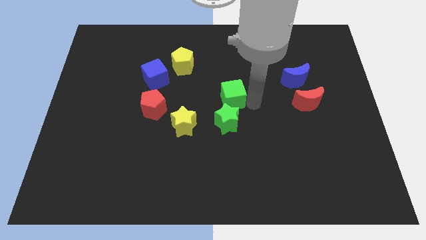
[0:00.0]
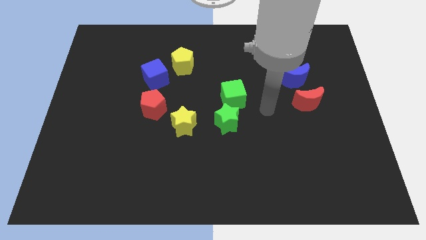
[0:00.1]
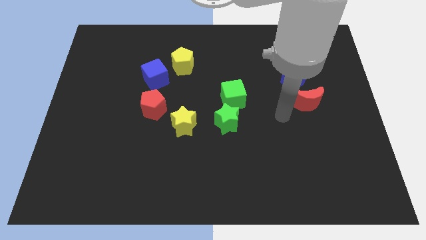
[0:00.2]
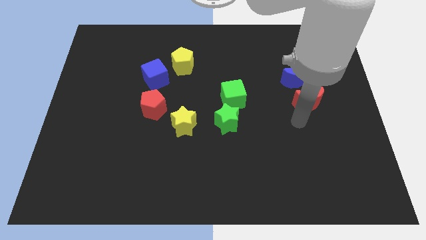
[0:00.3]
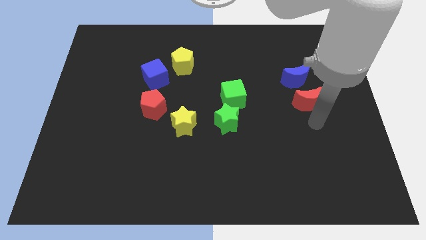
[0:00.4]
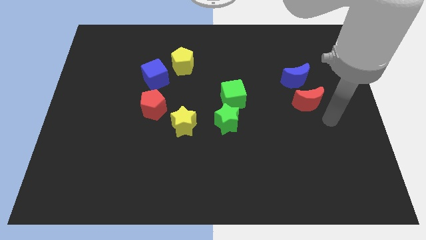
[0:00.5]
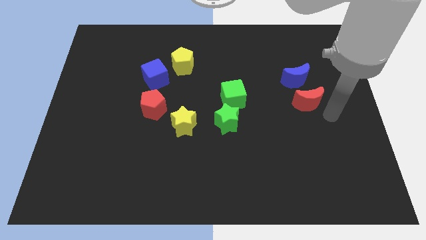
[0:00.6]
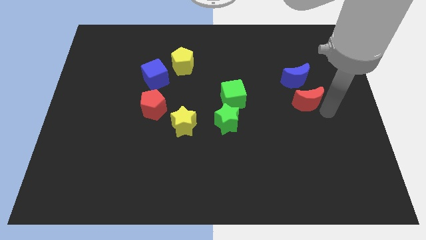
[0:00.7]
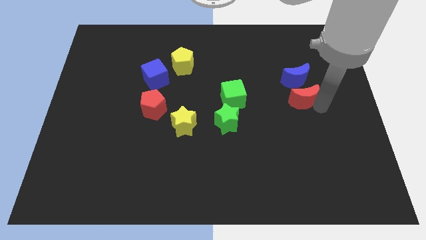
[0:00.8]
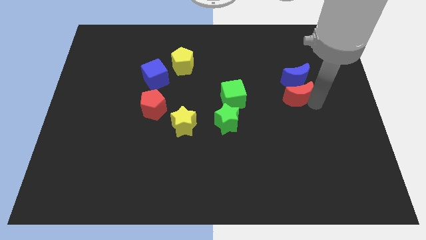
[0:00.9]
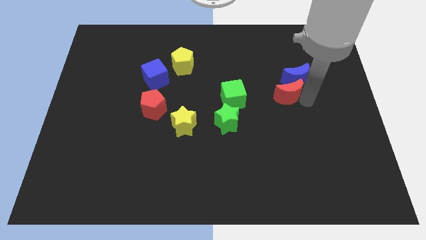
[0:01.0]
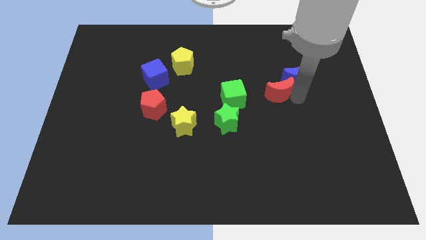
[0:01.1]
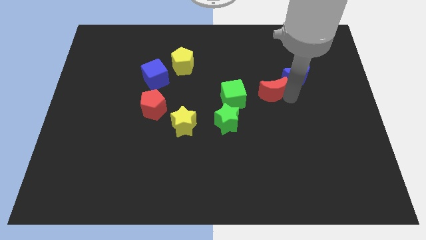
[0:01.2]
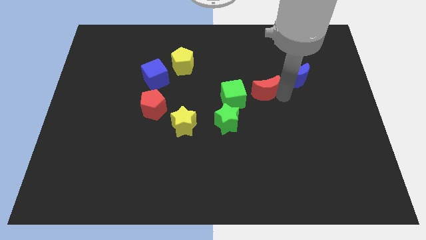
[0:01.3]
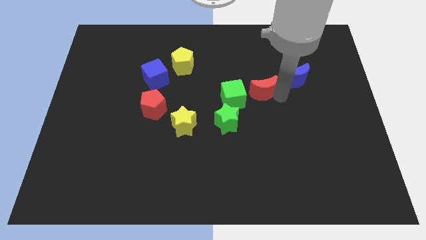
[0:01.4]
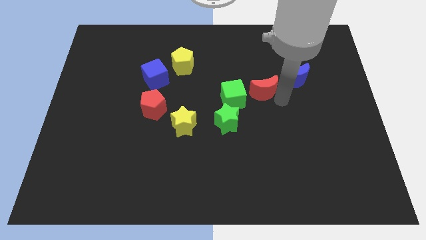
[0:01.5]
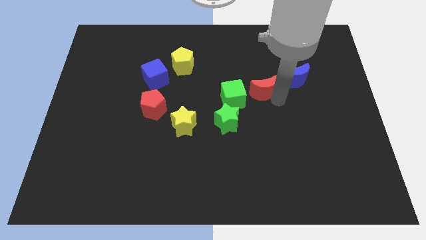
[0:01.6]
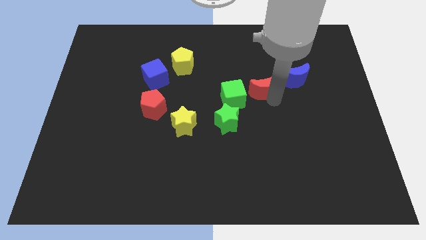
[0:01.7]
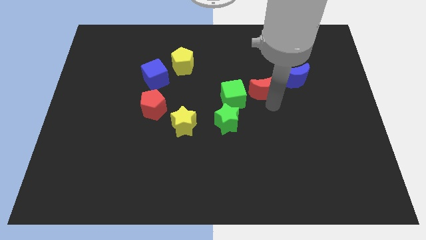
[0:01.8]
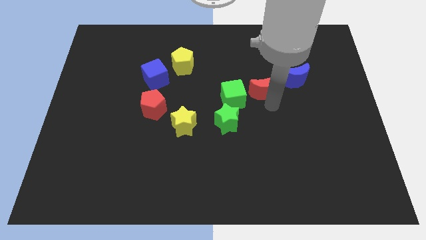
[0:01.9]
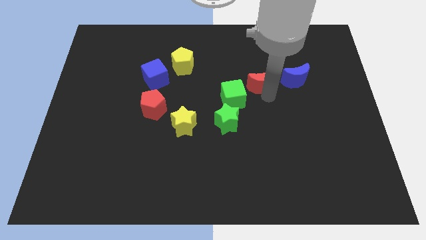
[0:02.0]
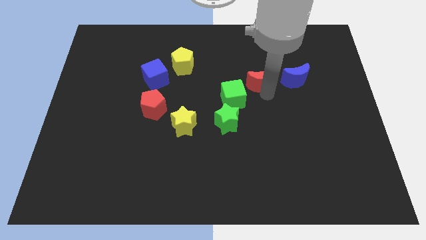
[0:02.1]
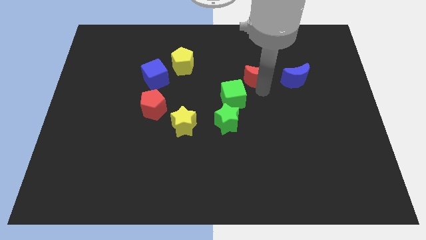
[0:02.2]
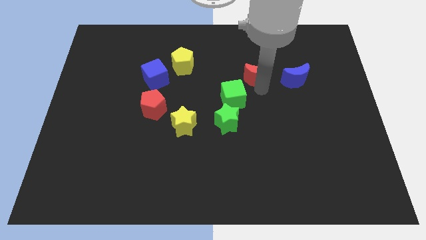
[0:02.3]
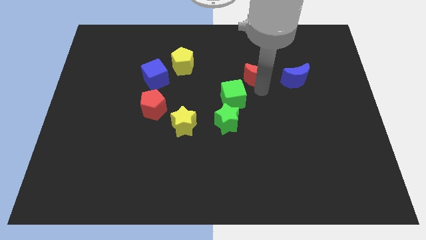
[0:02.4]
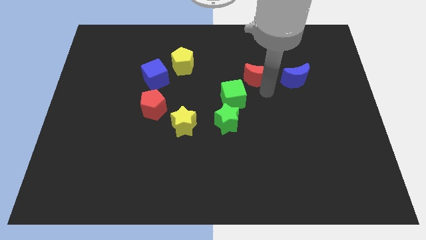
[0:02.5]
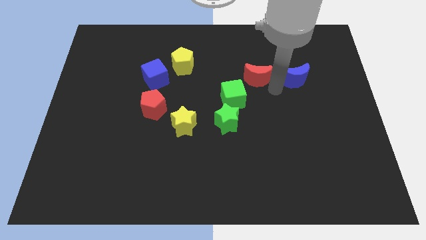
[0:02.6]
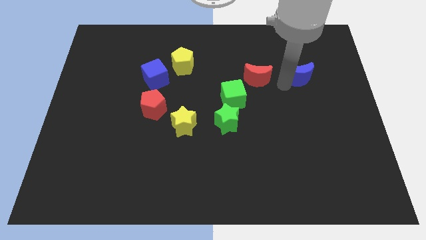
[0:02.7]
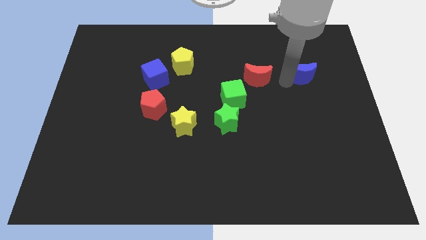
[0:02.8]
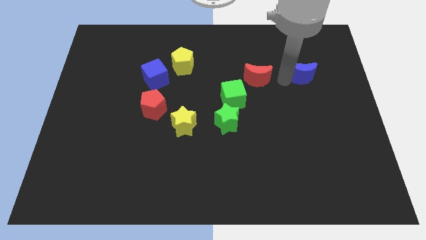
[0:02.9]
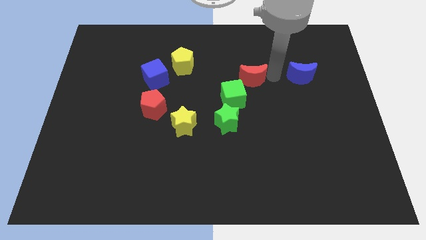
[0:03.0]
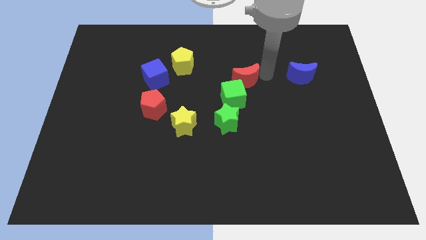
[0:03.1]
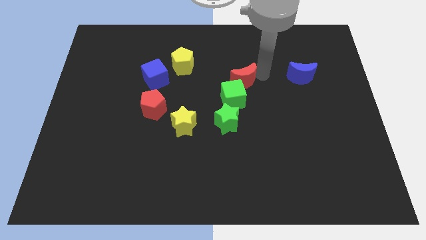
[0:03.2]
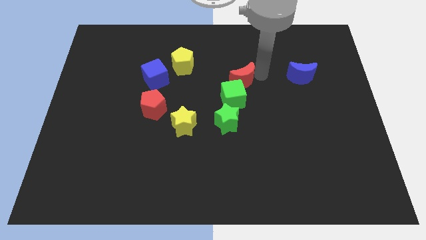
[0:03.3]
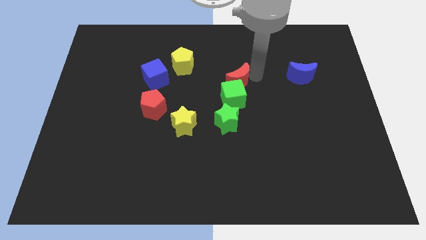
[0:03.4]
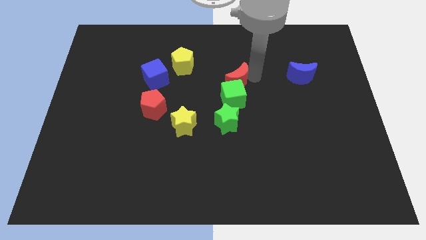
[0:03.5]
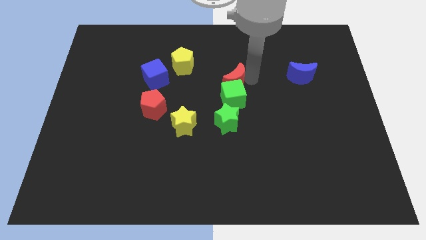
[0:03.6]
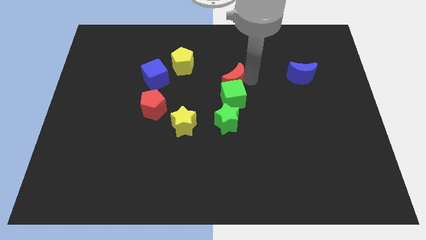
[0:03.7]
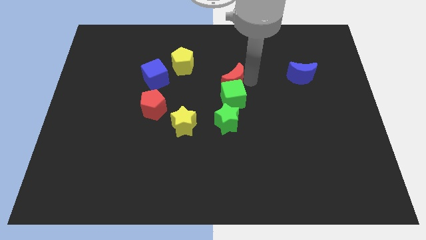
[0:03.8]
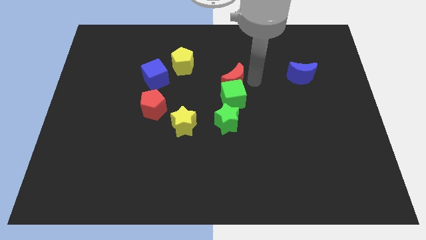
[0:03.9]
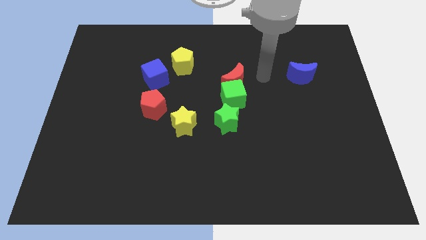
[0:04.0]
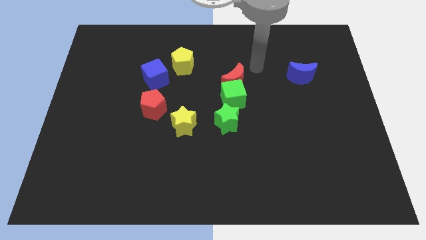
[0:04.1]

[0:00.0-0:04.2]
put the red crescent above the green cube

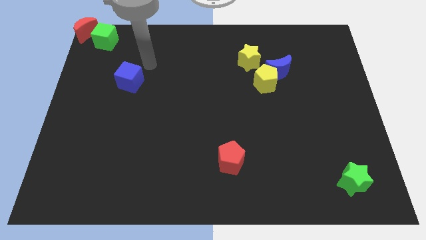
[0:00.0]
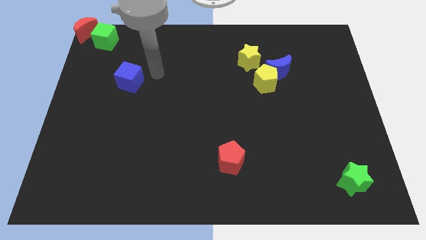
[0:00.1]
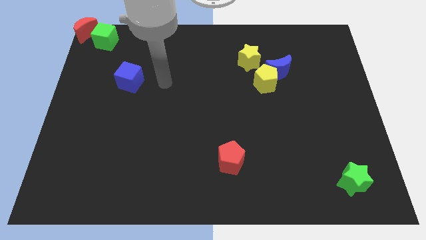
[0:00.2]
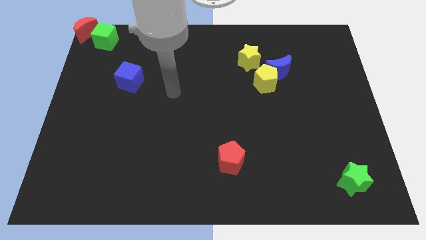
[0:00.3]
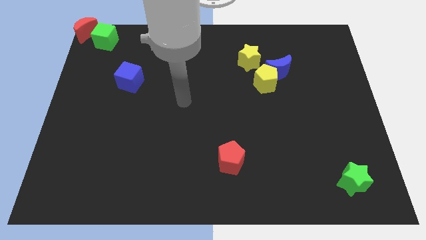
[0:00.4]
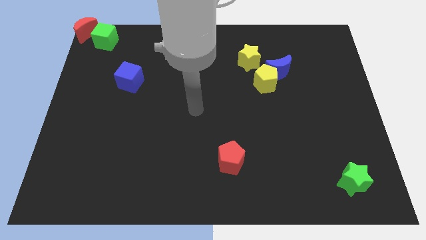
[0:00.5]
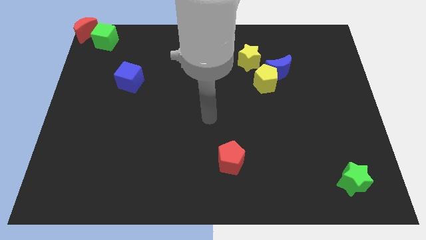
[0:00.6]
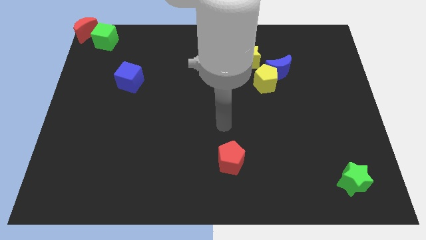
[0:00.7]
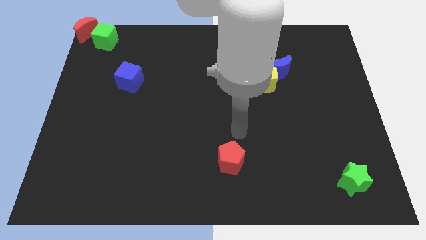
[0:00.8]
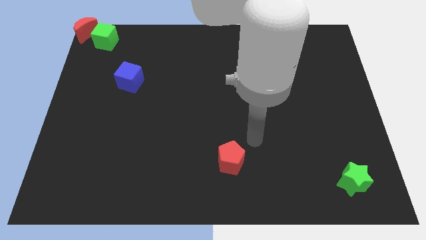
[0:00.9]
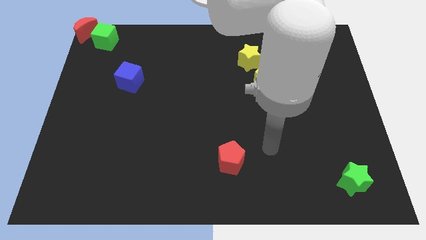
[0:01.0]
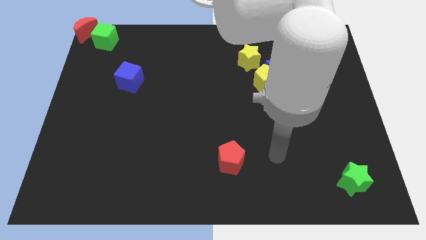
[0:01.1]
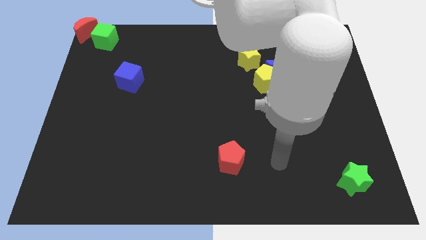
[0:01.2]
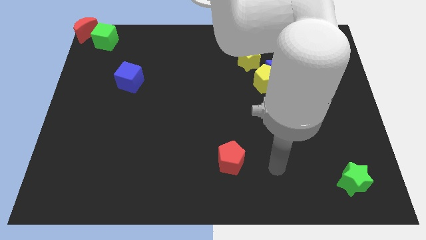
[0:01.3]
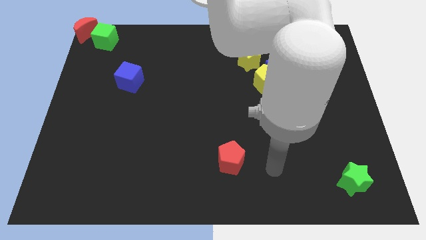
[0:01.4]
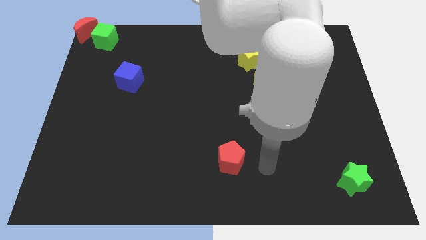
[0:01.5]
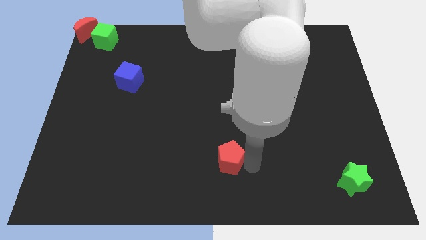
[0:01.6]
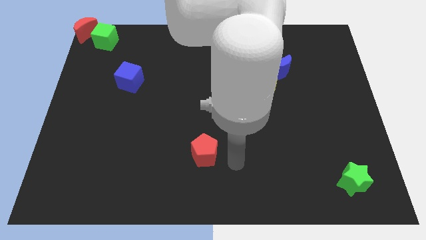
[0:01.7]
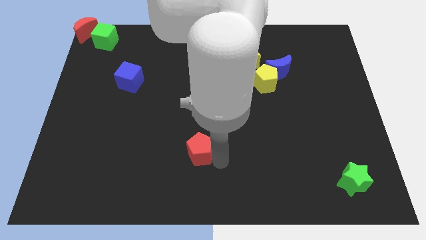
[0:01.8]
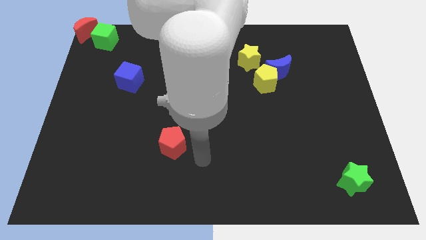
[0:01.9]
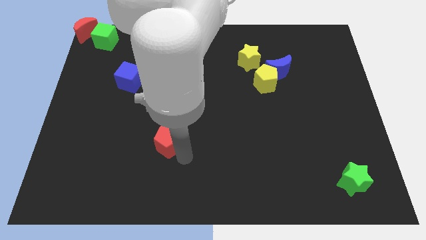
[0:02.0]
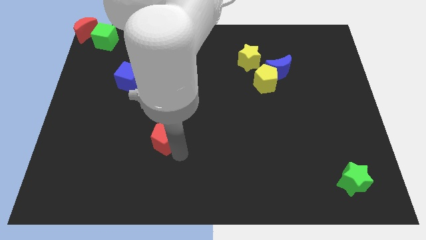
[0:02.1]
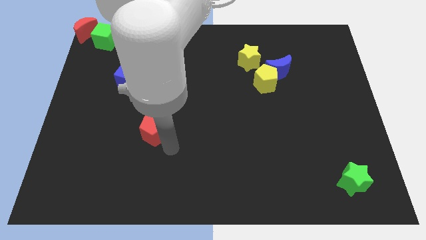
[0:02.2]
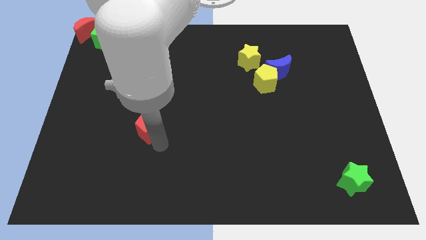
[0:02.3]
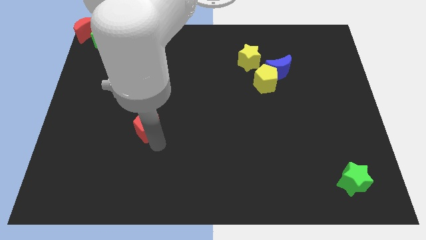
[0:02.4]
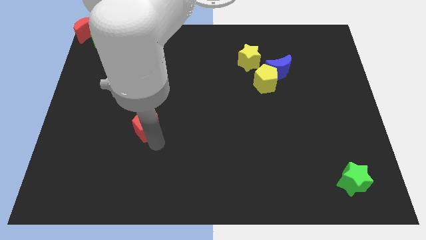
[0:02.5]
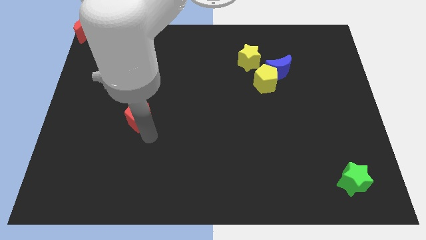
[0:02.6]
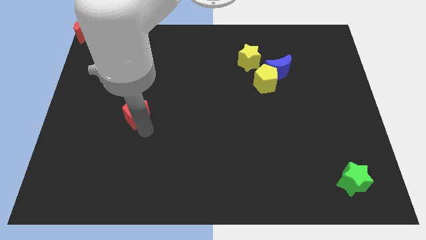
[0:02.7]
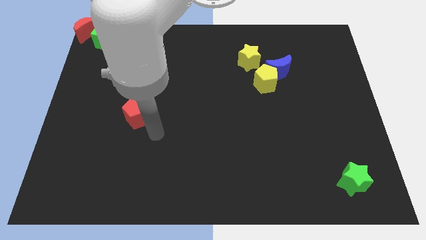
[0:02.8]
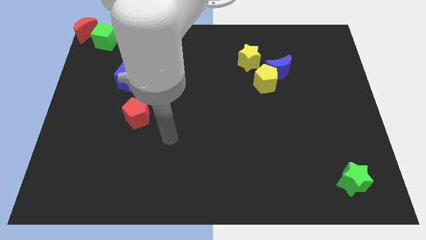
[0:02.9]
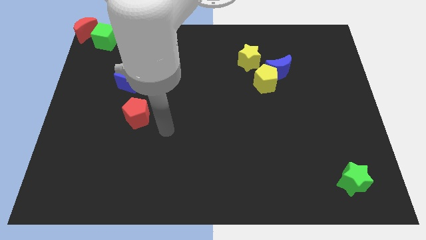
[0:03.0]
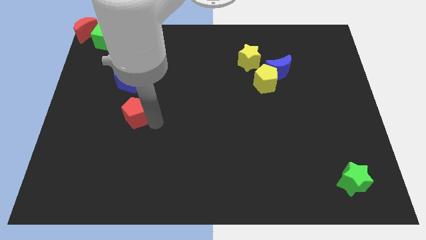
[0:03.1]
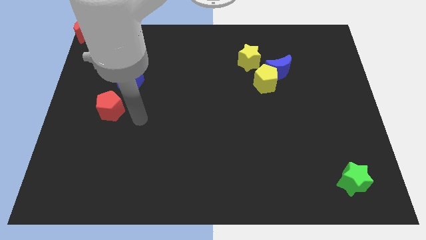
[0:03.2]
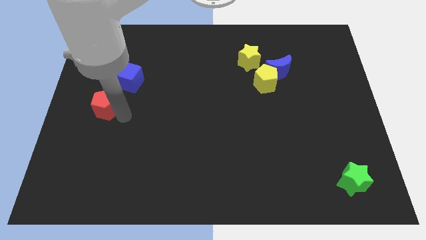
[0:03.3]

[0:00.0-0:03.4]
push the red pentagon towards the blue cube

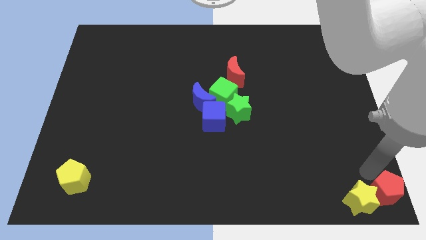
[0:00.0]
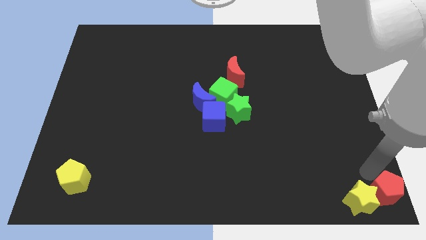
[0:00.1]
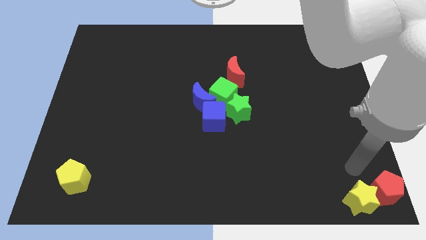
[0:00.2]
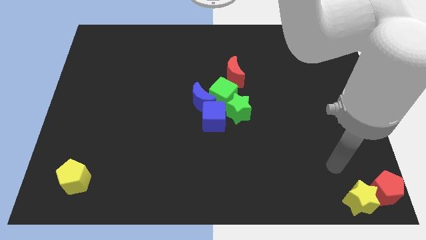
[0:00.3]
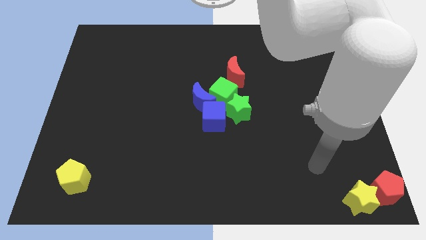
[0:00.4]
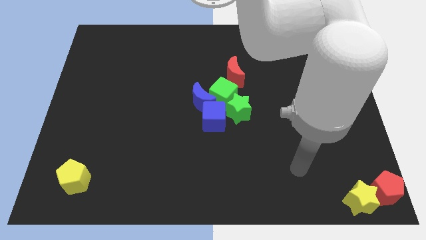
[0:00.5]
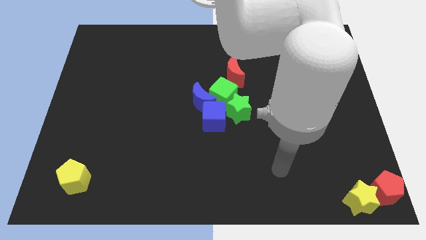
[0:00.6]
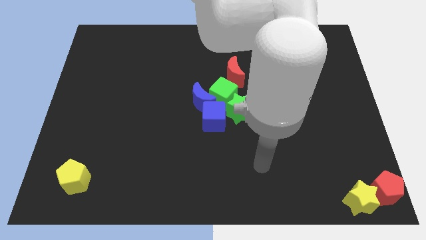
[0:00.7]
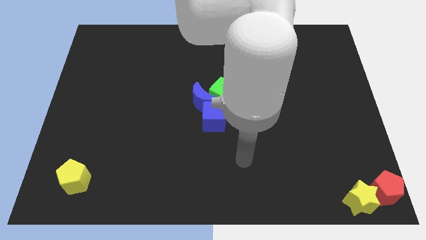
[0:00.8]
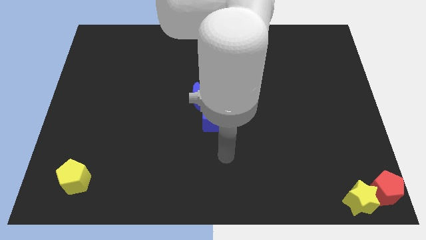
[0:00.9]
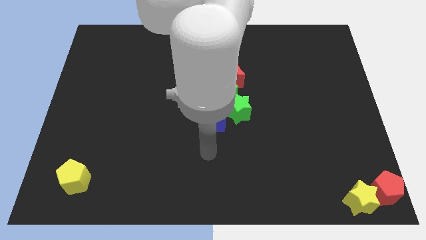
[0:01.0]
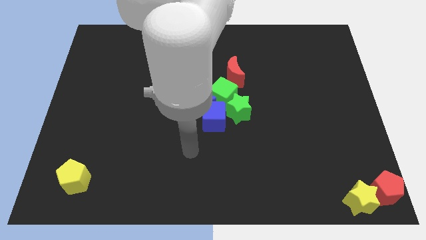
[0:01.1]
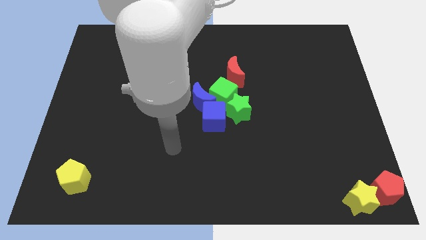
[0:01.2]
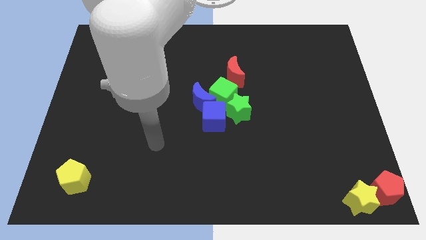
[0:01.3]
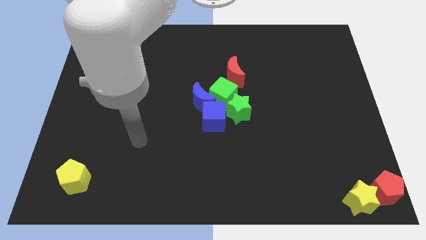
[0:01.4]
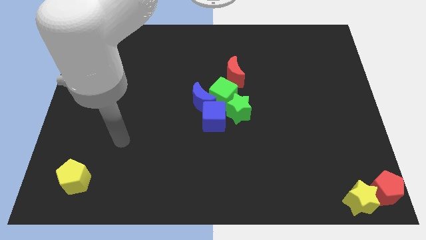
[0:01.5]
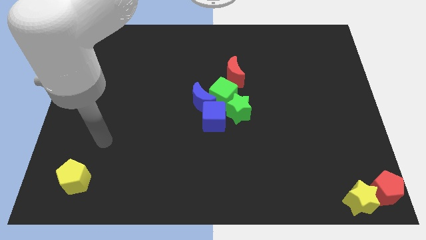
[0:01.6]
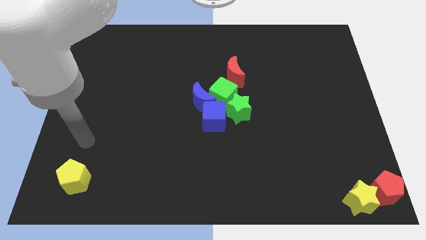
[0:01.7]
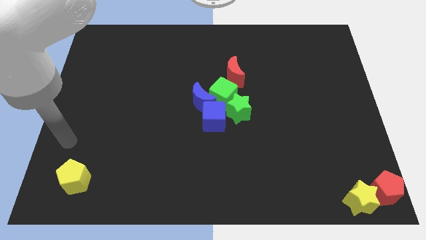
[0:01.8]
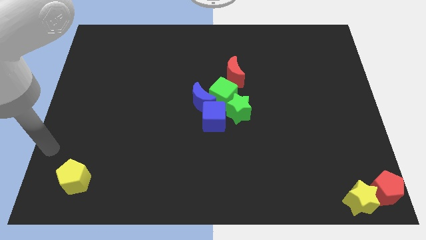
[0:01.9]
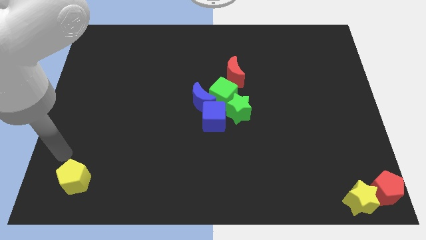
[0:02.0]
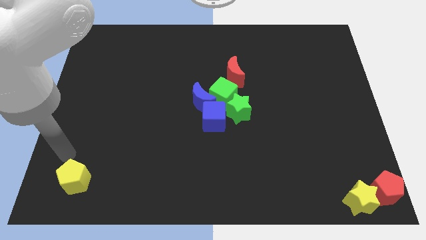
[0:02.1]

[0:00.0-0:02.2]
move your arm towards the yellow pentagon
